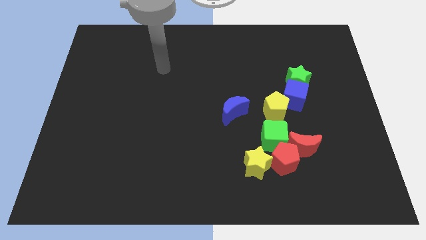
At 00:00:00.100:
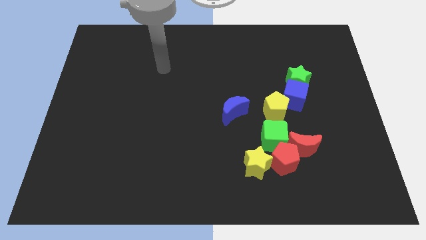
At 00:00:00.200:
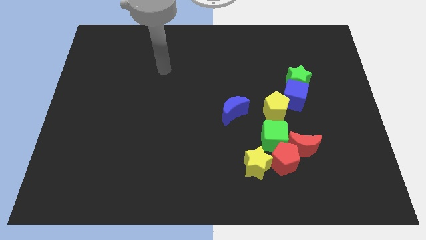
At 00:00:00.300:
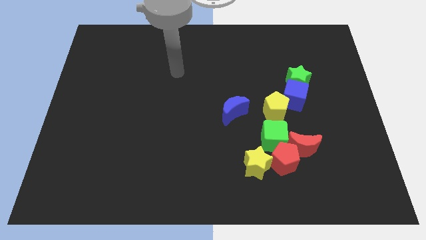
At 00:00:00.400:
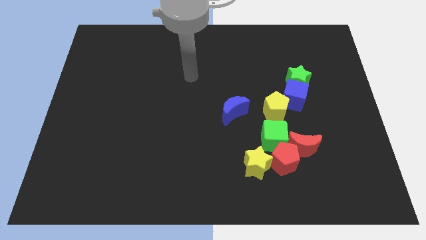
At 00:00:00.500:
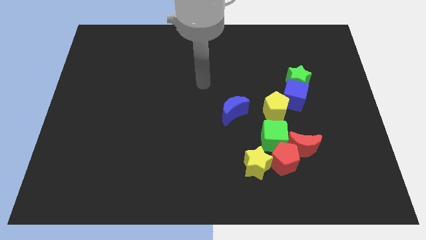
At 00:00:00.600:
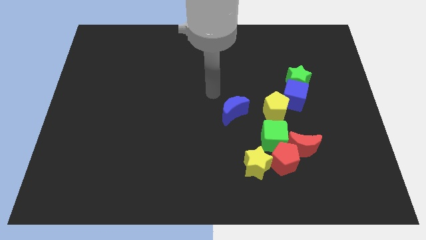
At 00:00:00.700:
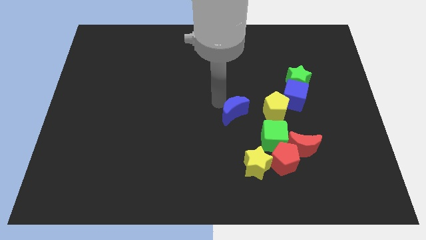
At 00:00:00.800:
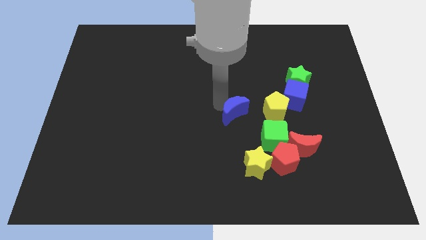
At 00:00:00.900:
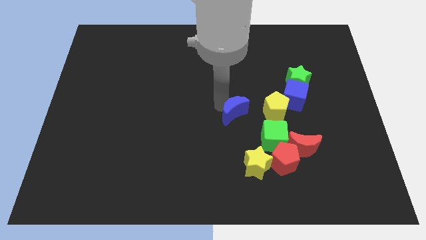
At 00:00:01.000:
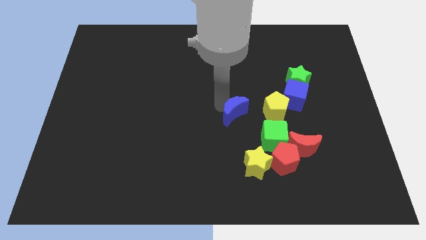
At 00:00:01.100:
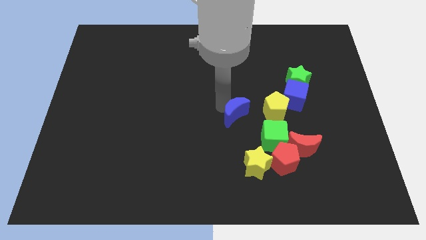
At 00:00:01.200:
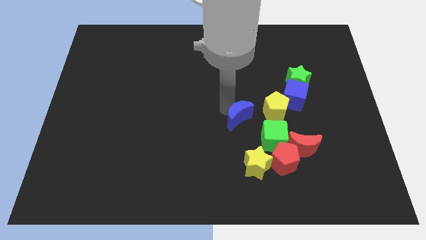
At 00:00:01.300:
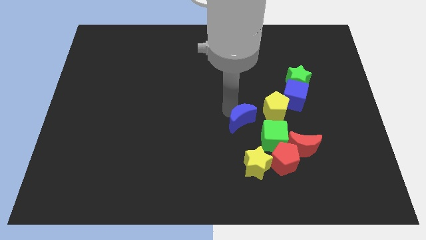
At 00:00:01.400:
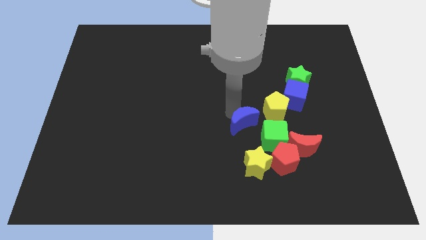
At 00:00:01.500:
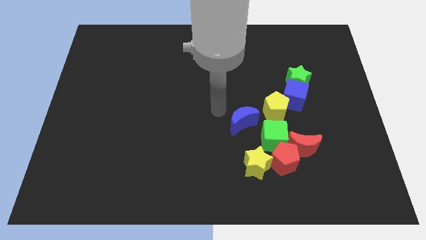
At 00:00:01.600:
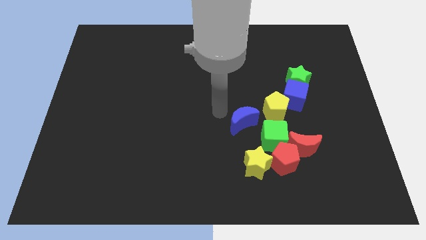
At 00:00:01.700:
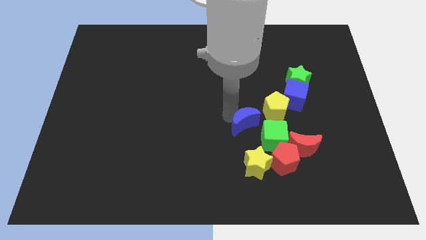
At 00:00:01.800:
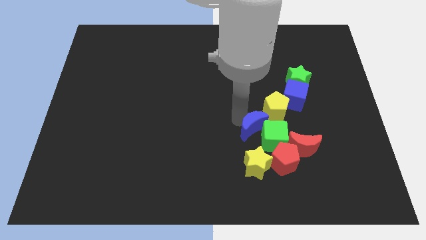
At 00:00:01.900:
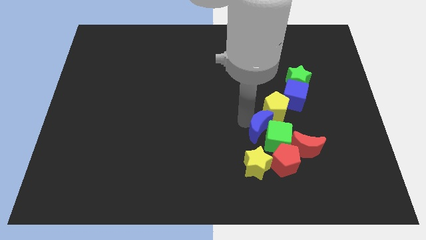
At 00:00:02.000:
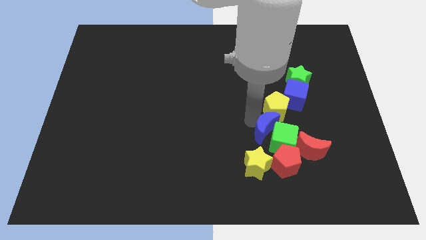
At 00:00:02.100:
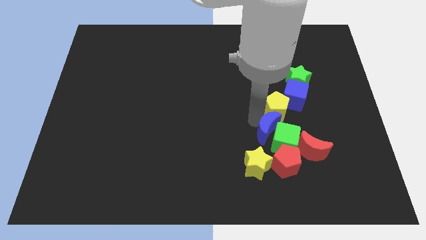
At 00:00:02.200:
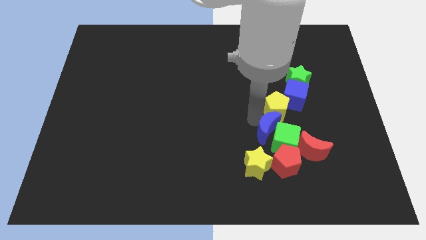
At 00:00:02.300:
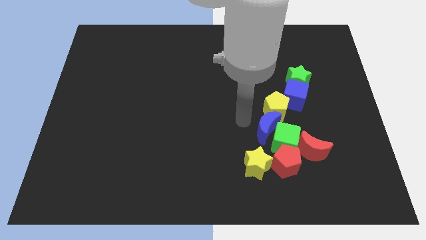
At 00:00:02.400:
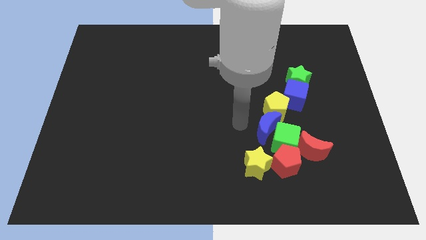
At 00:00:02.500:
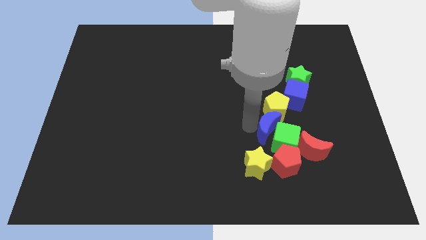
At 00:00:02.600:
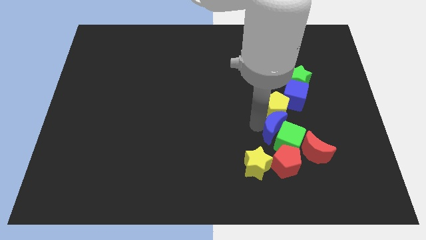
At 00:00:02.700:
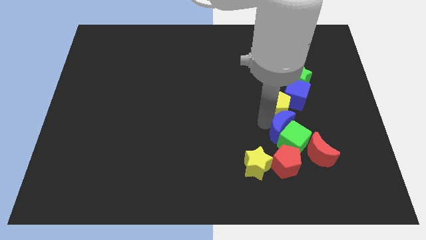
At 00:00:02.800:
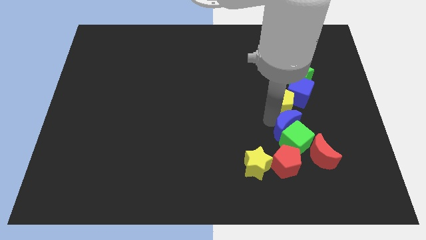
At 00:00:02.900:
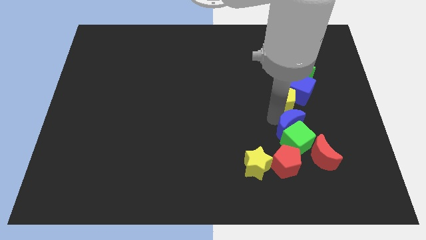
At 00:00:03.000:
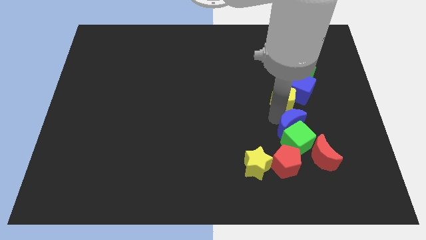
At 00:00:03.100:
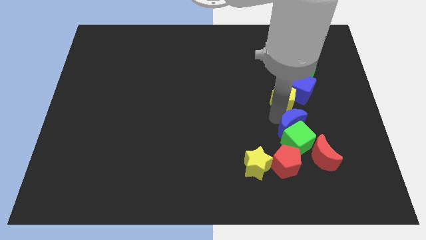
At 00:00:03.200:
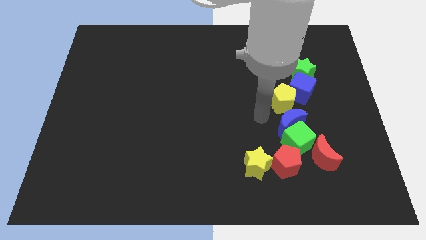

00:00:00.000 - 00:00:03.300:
push the blue moon between the yellow pentagon and green cube

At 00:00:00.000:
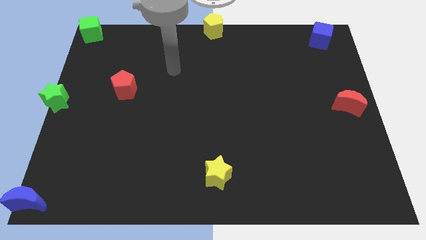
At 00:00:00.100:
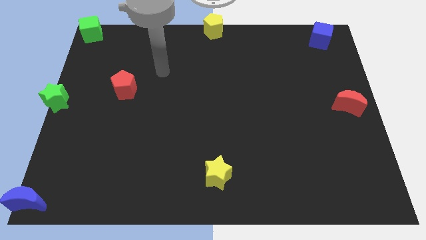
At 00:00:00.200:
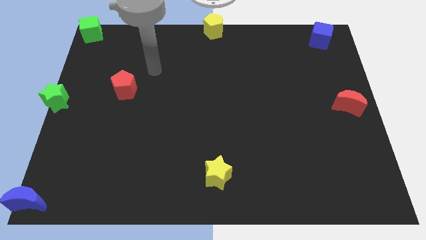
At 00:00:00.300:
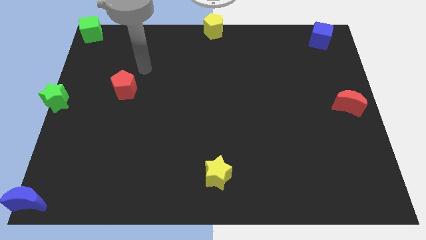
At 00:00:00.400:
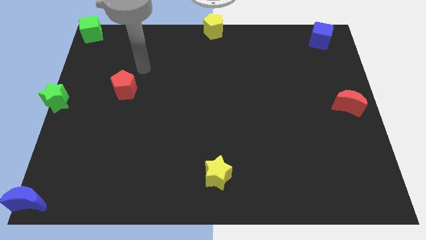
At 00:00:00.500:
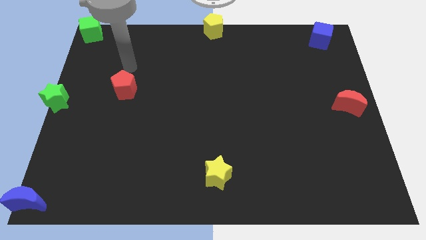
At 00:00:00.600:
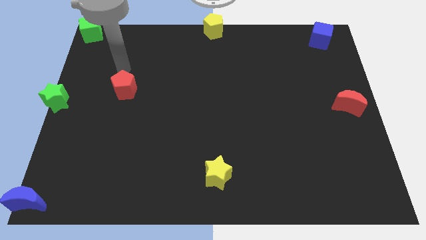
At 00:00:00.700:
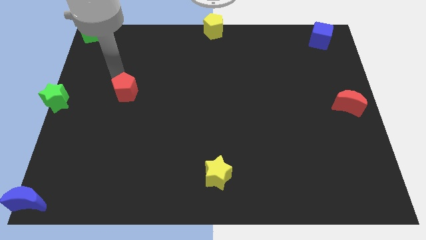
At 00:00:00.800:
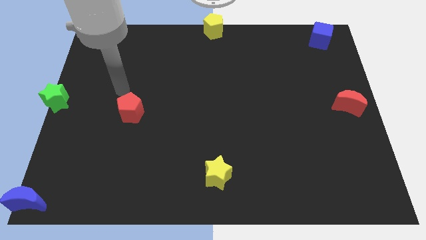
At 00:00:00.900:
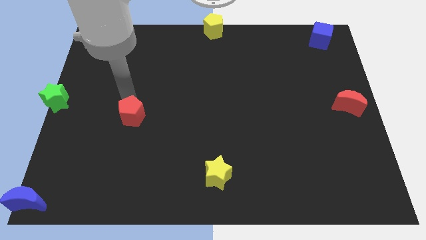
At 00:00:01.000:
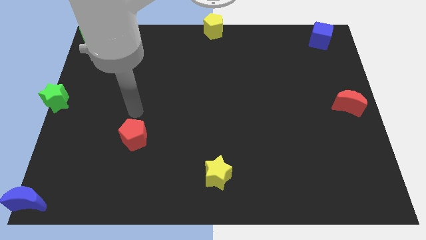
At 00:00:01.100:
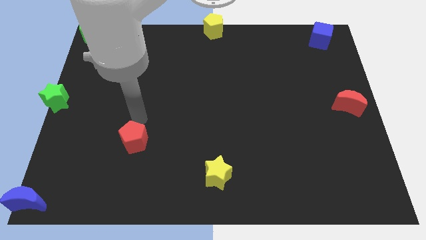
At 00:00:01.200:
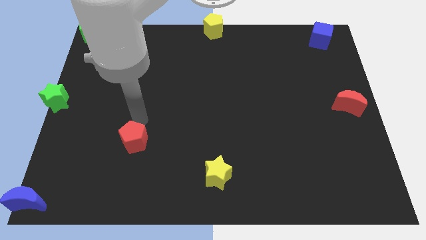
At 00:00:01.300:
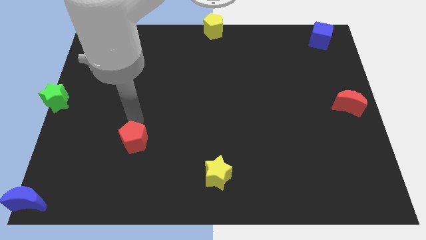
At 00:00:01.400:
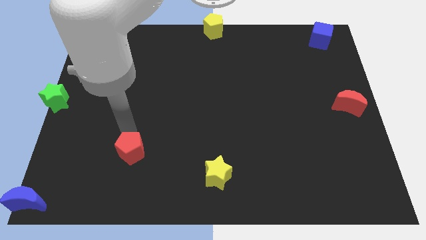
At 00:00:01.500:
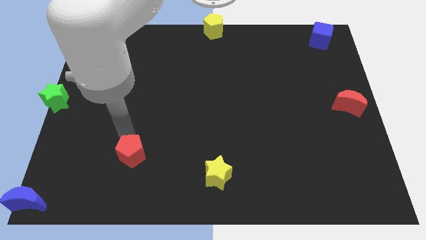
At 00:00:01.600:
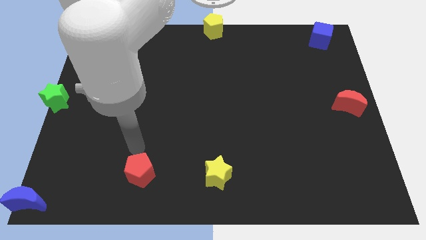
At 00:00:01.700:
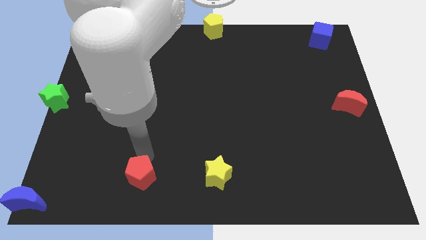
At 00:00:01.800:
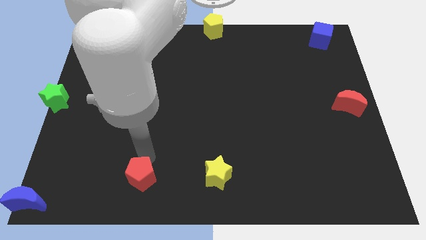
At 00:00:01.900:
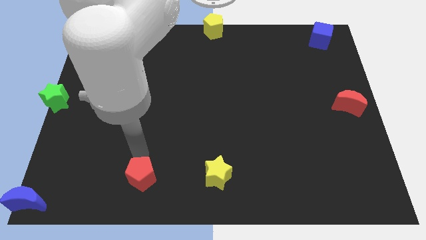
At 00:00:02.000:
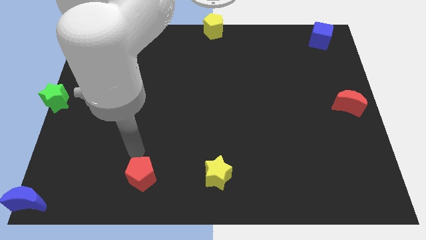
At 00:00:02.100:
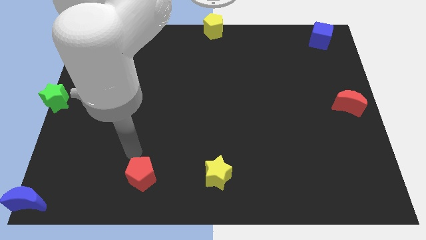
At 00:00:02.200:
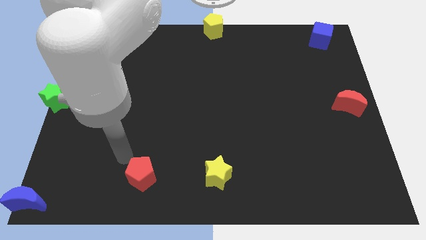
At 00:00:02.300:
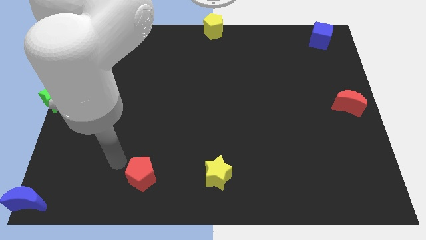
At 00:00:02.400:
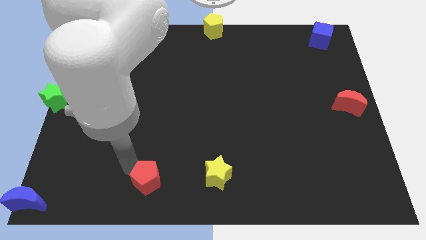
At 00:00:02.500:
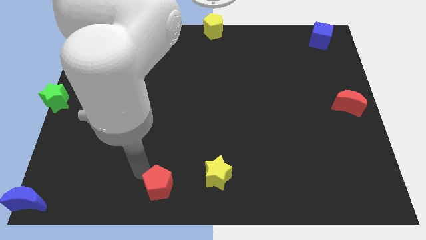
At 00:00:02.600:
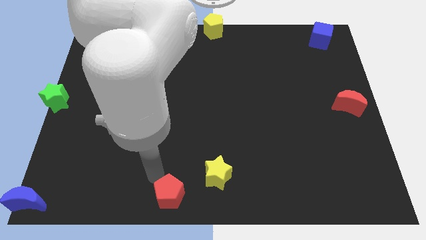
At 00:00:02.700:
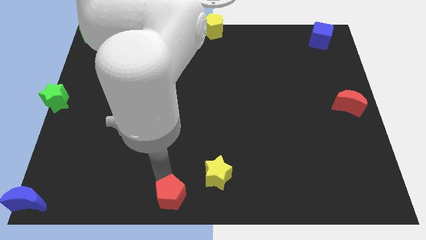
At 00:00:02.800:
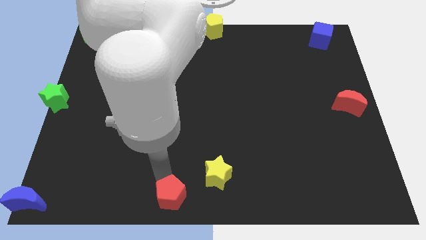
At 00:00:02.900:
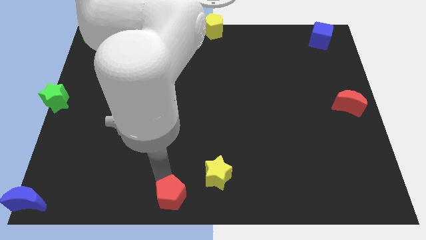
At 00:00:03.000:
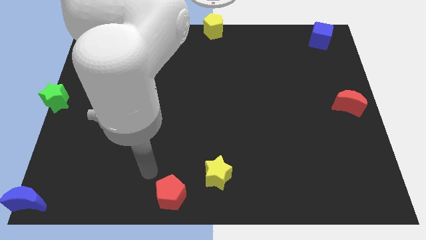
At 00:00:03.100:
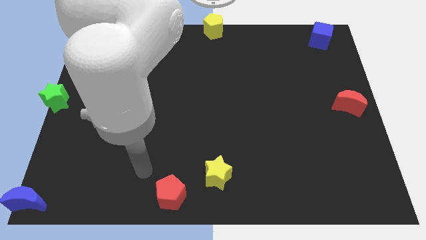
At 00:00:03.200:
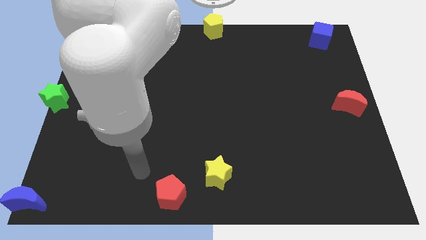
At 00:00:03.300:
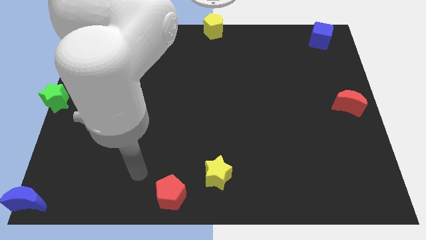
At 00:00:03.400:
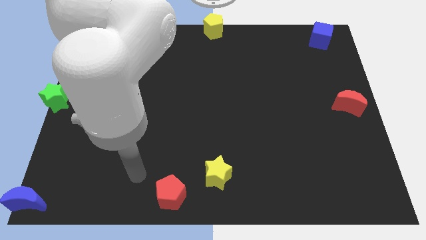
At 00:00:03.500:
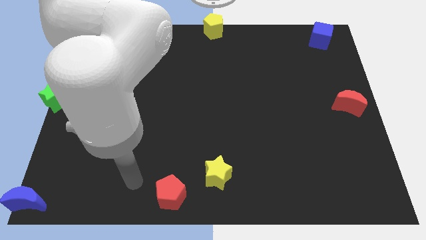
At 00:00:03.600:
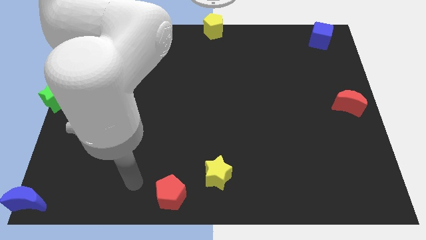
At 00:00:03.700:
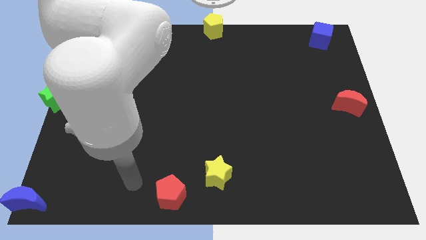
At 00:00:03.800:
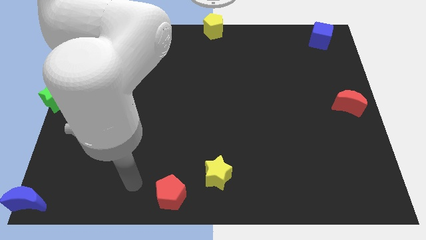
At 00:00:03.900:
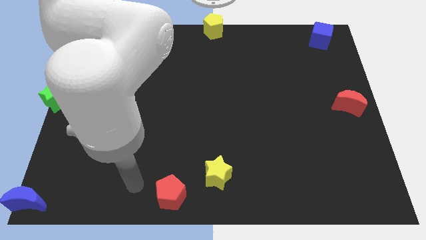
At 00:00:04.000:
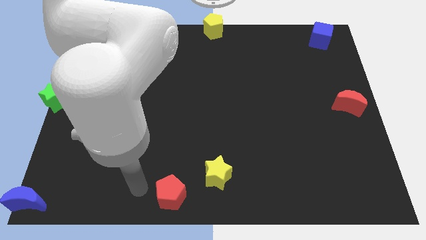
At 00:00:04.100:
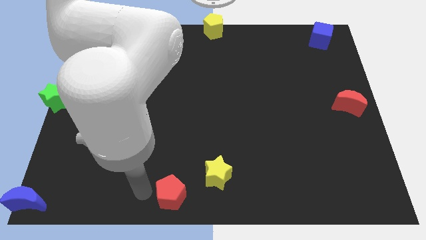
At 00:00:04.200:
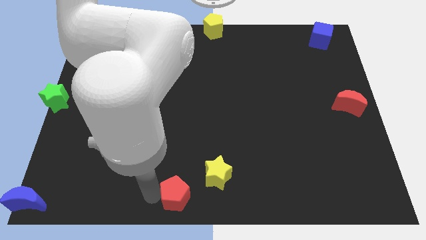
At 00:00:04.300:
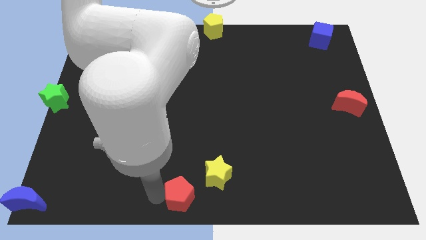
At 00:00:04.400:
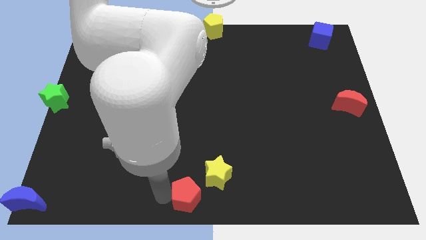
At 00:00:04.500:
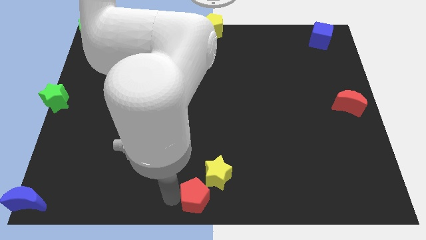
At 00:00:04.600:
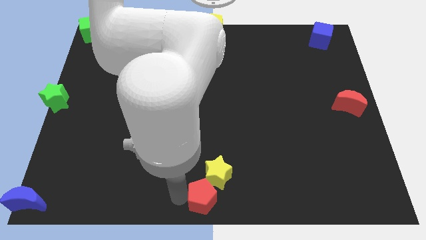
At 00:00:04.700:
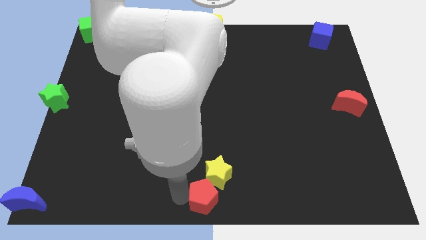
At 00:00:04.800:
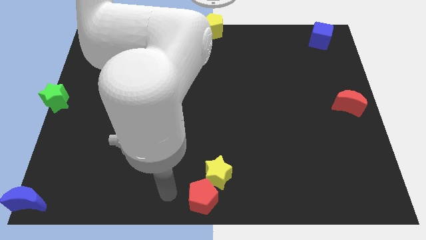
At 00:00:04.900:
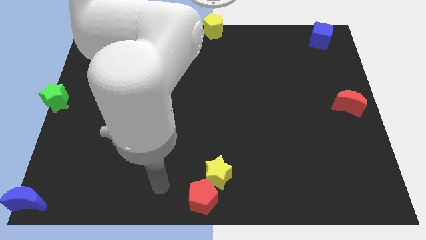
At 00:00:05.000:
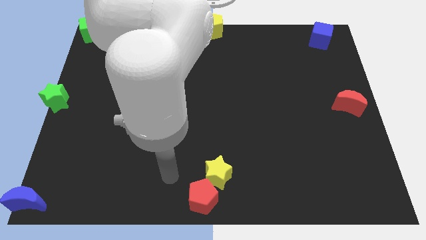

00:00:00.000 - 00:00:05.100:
move the red pentagon to the bottom center of the board

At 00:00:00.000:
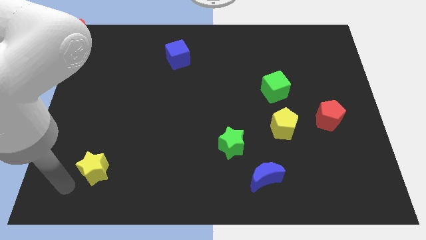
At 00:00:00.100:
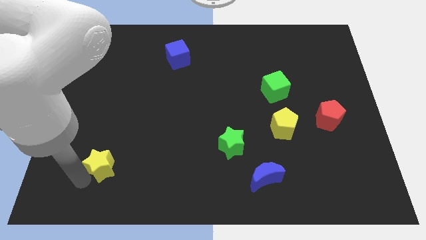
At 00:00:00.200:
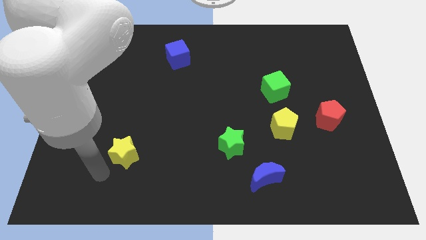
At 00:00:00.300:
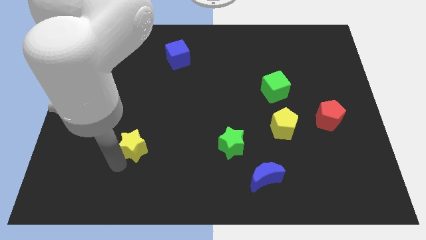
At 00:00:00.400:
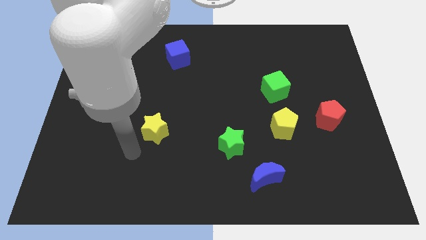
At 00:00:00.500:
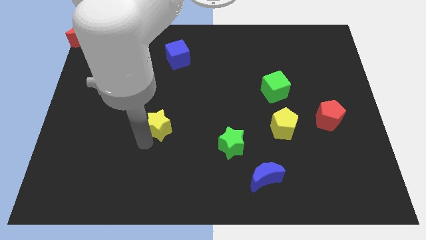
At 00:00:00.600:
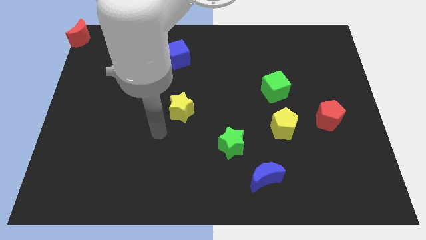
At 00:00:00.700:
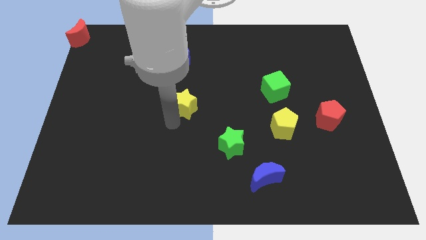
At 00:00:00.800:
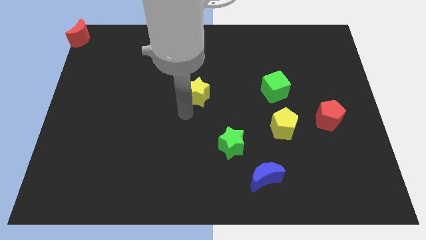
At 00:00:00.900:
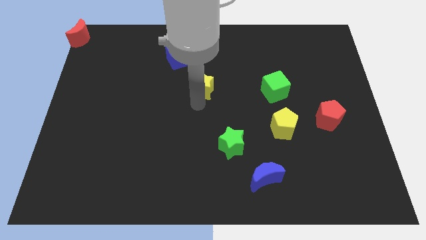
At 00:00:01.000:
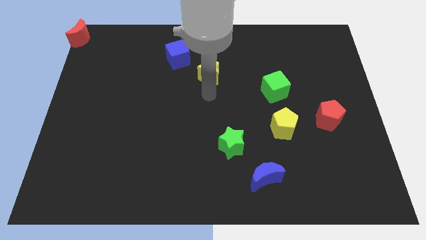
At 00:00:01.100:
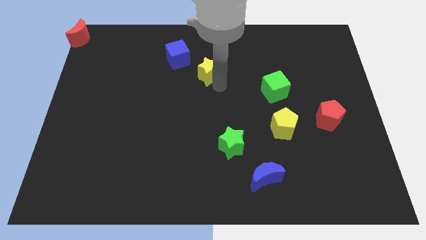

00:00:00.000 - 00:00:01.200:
push the yellow star to the bottom right side of the blue cube
